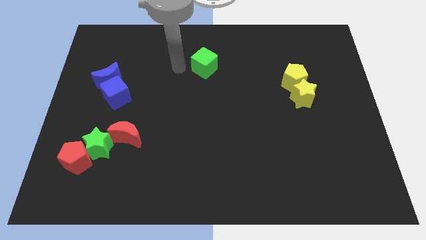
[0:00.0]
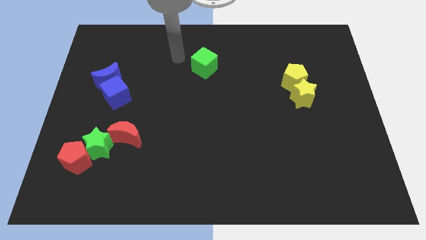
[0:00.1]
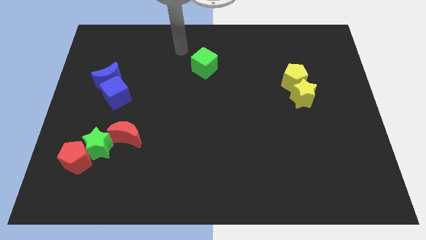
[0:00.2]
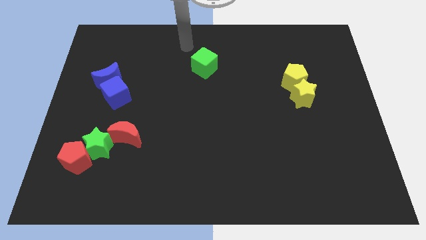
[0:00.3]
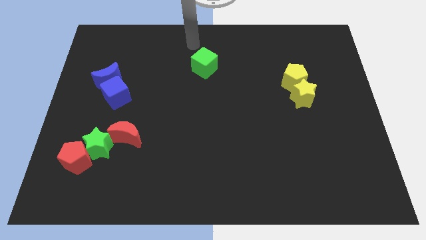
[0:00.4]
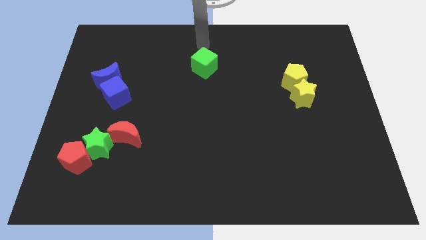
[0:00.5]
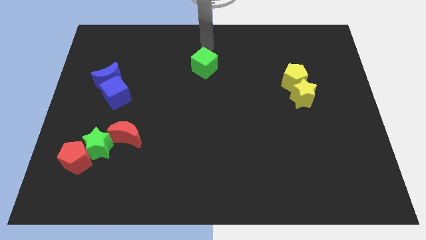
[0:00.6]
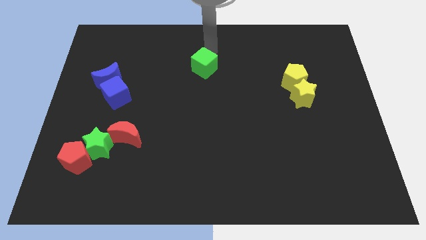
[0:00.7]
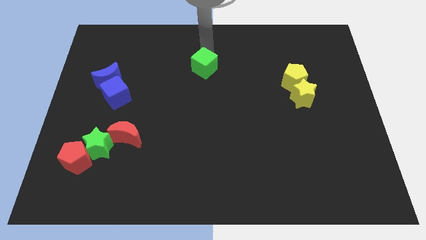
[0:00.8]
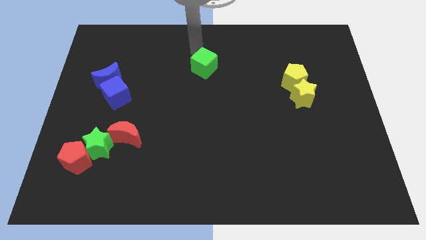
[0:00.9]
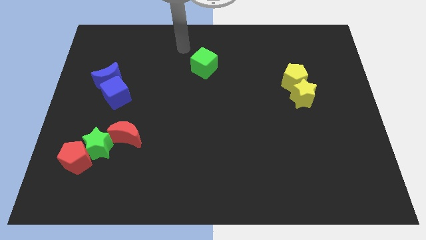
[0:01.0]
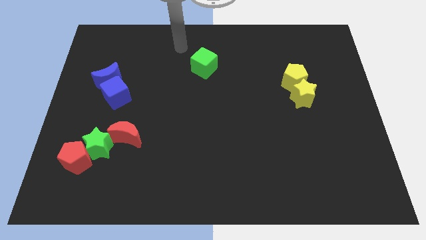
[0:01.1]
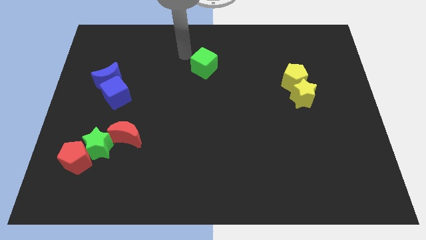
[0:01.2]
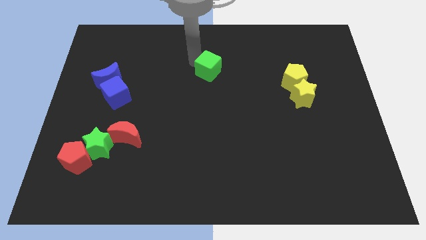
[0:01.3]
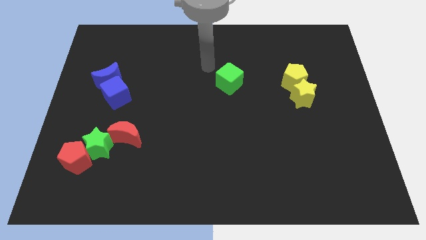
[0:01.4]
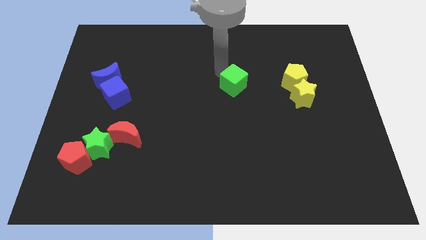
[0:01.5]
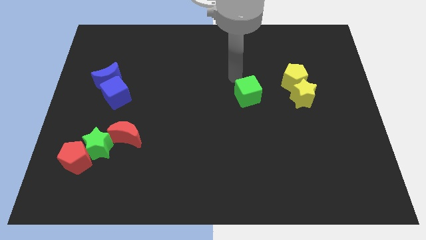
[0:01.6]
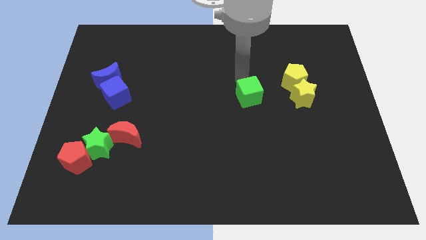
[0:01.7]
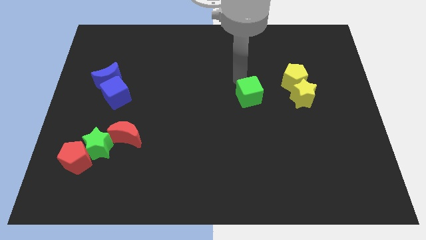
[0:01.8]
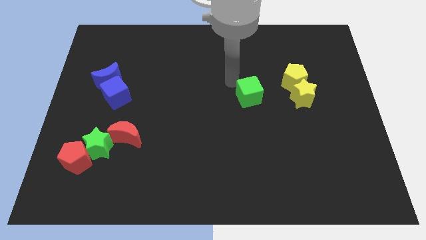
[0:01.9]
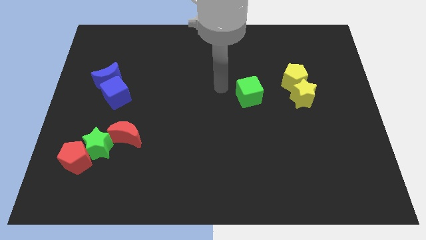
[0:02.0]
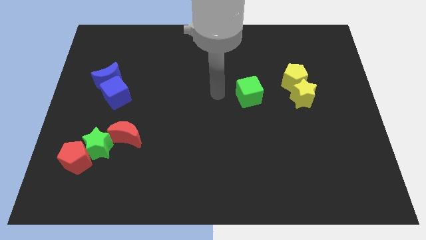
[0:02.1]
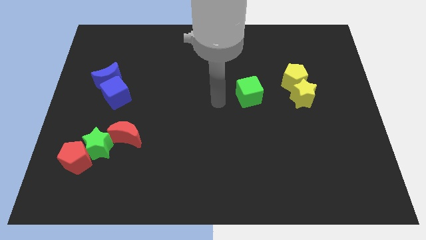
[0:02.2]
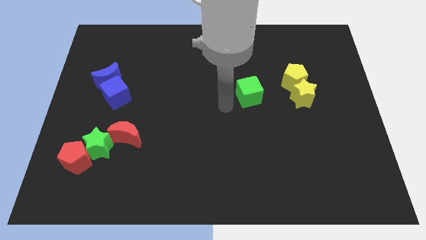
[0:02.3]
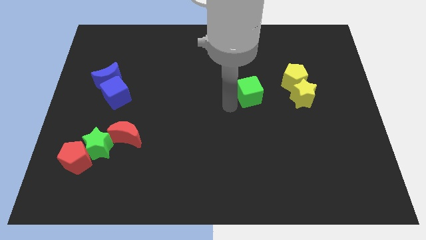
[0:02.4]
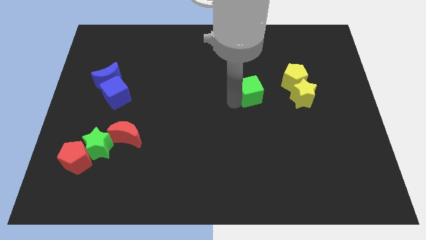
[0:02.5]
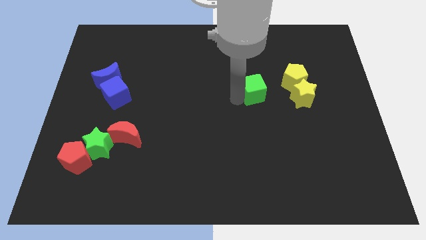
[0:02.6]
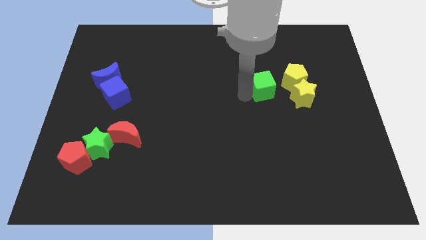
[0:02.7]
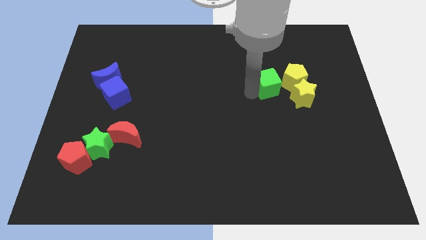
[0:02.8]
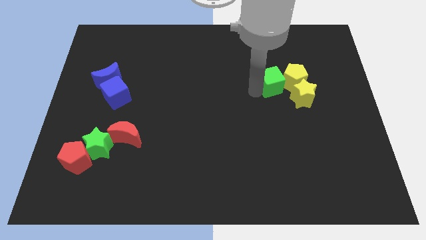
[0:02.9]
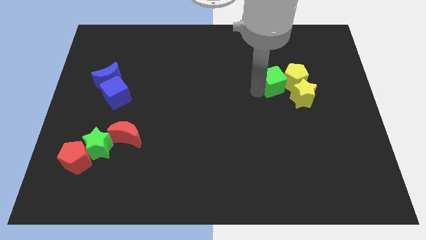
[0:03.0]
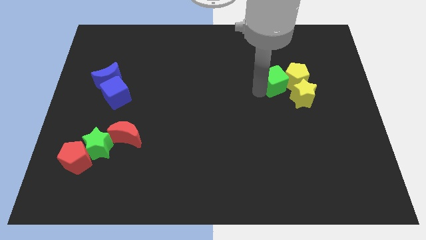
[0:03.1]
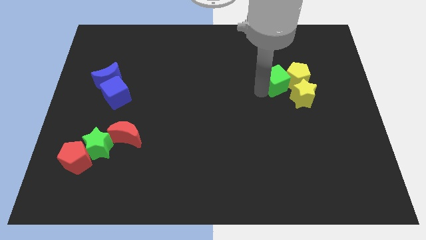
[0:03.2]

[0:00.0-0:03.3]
push the green cube into the yellow pentagon

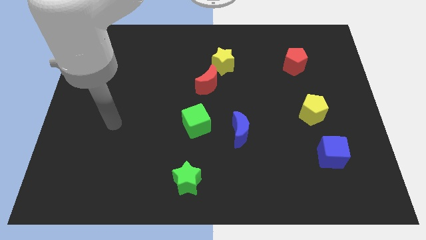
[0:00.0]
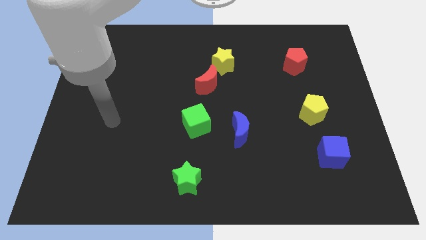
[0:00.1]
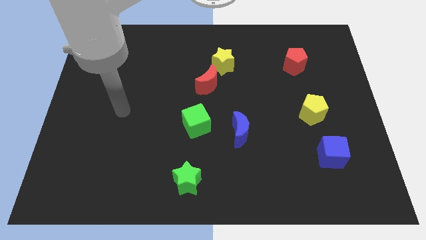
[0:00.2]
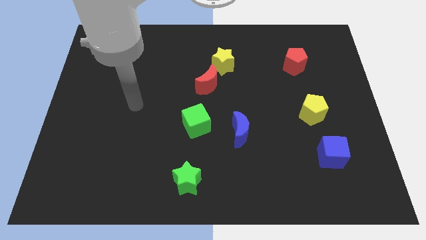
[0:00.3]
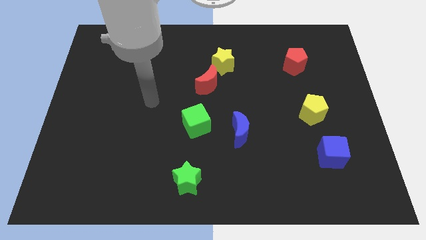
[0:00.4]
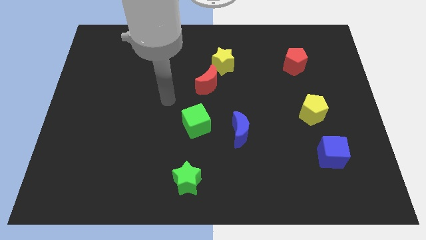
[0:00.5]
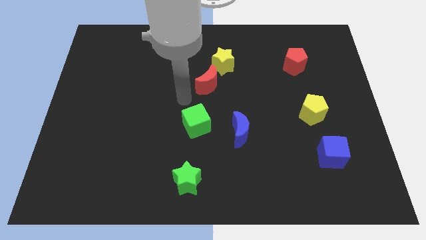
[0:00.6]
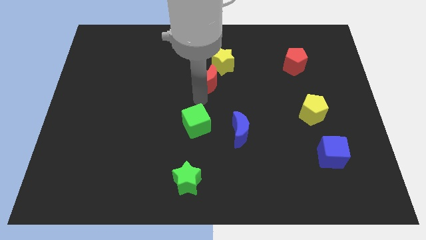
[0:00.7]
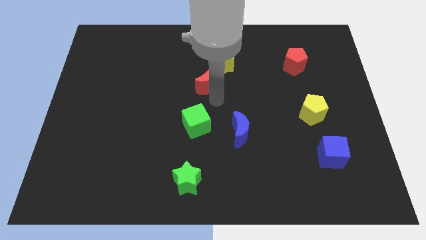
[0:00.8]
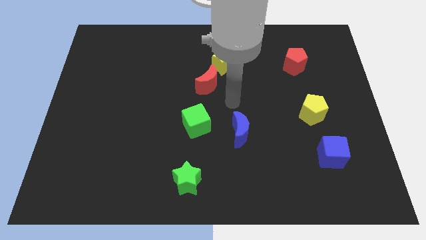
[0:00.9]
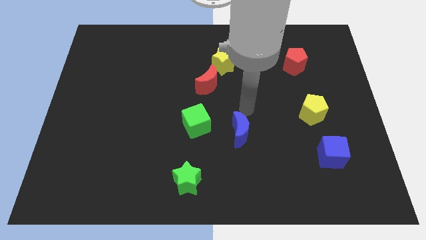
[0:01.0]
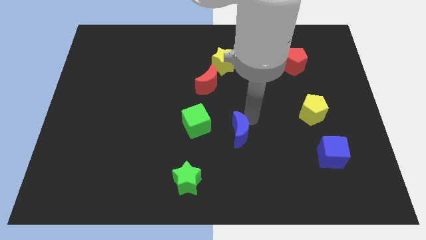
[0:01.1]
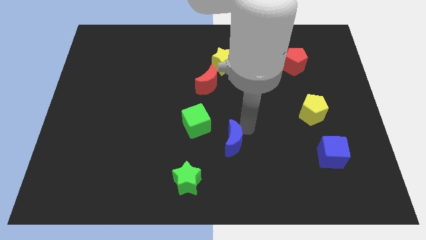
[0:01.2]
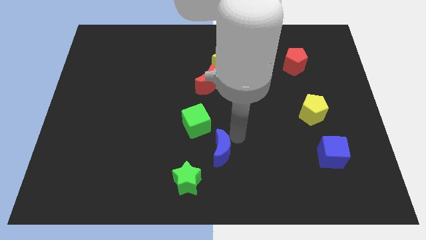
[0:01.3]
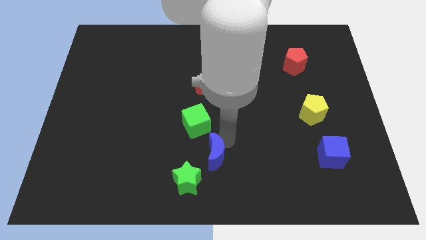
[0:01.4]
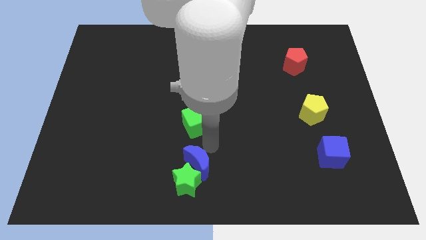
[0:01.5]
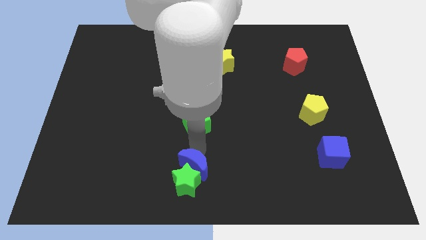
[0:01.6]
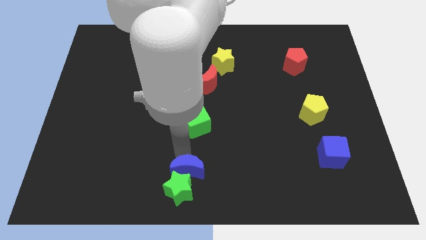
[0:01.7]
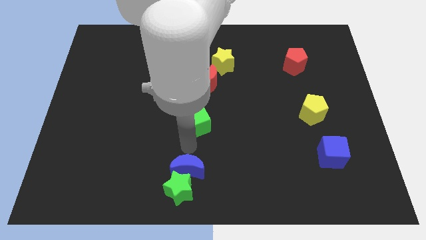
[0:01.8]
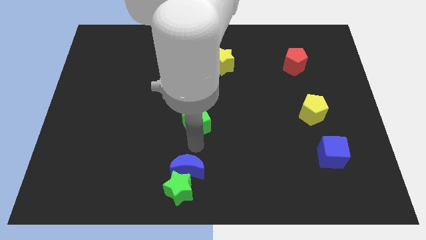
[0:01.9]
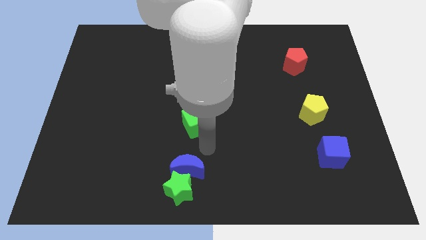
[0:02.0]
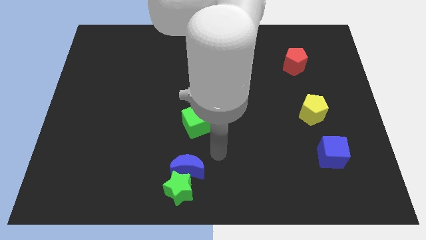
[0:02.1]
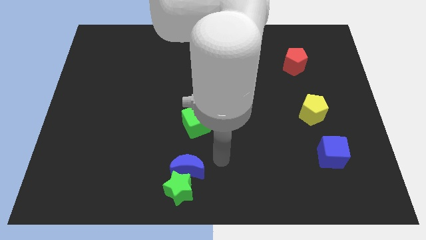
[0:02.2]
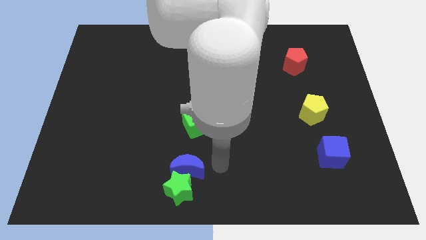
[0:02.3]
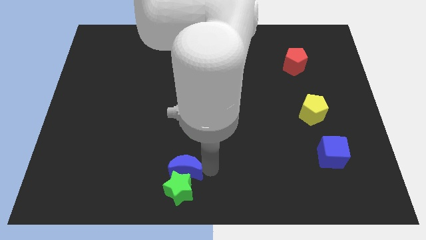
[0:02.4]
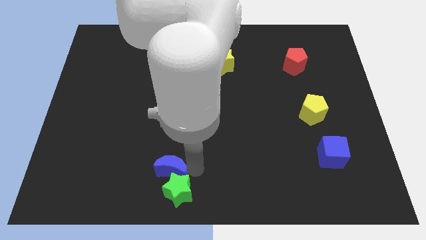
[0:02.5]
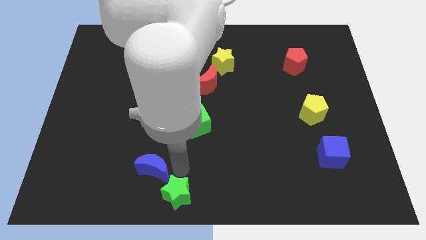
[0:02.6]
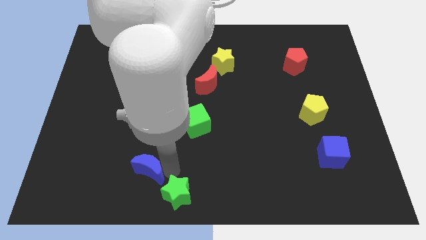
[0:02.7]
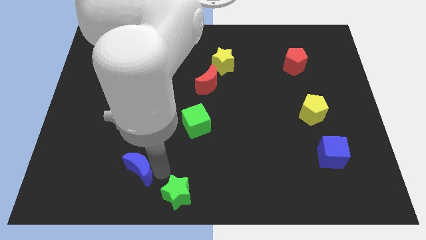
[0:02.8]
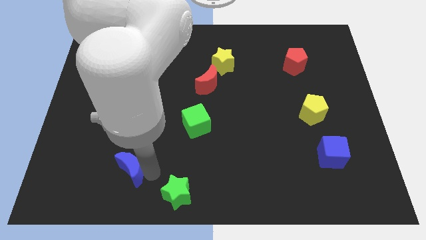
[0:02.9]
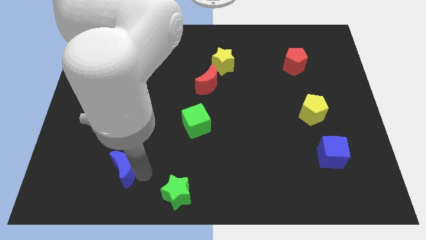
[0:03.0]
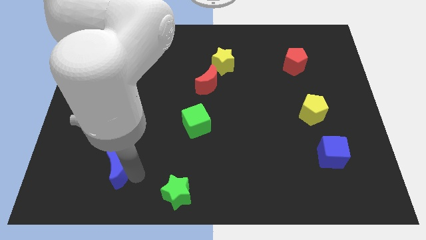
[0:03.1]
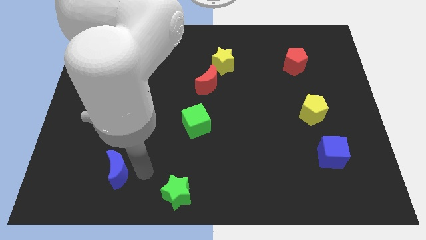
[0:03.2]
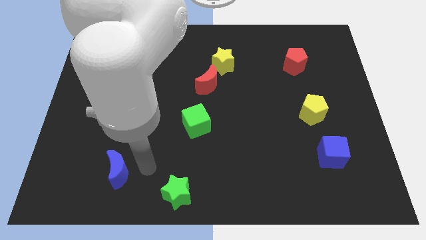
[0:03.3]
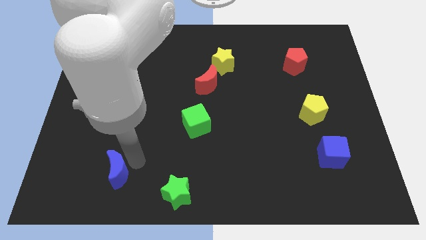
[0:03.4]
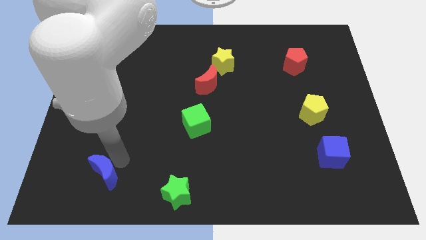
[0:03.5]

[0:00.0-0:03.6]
push the blue moon to the left side of the board by touching the gren star

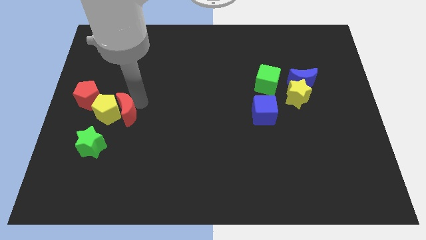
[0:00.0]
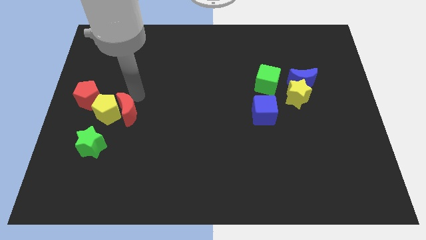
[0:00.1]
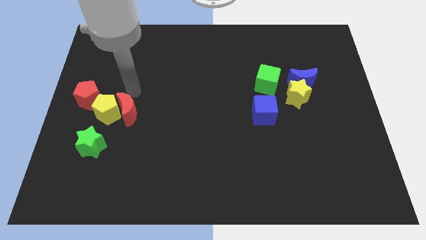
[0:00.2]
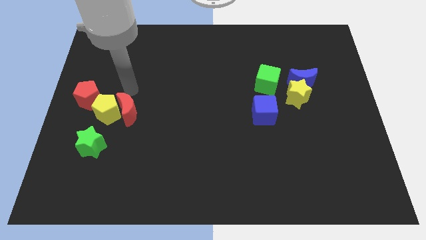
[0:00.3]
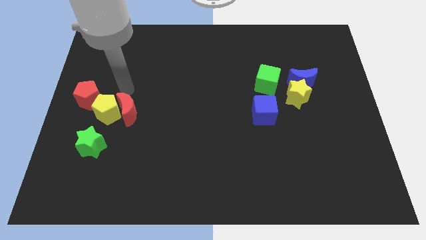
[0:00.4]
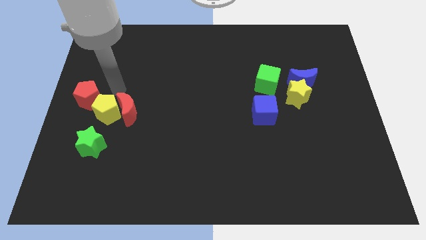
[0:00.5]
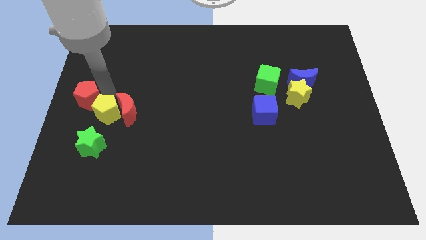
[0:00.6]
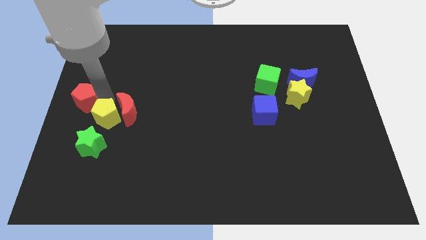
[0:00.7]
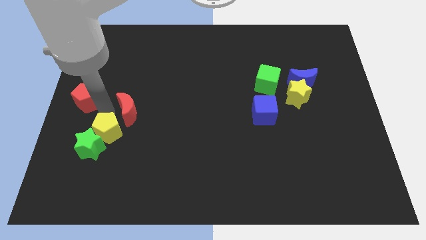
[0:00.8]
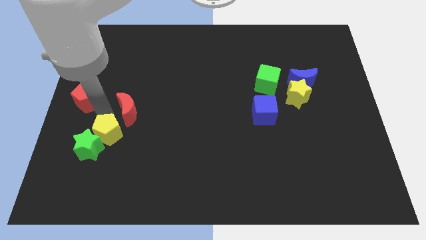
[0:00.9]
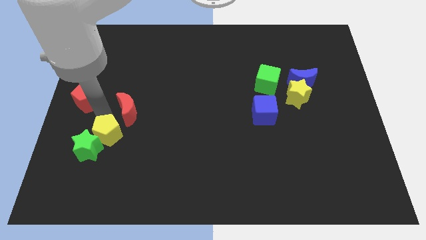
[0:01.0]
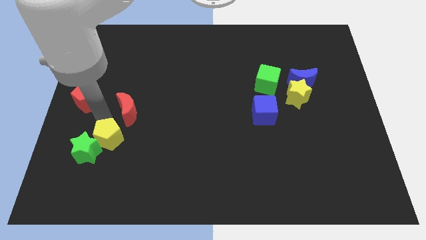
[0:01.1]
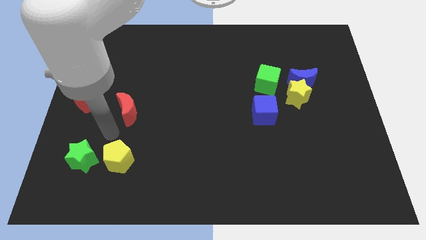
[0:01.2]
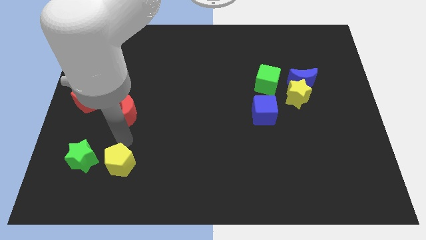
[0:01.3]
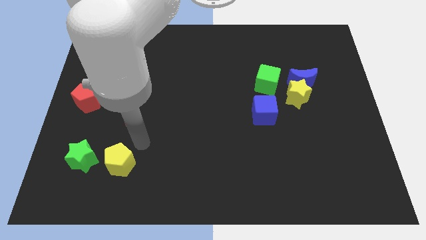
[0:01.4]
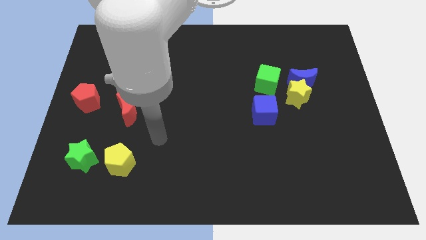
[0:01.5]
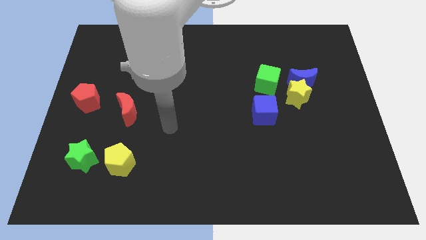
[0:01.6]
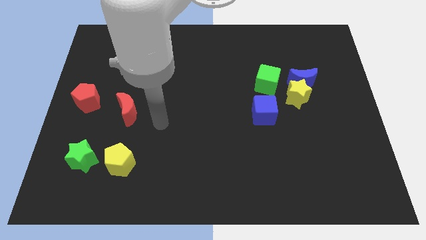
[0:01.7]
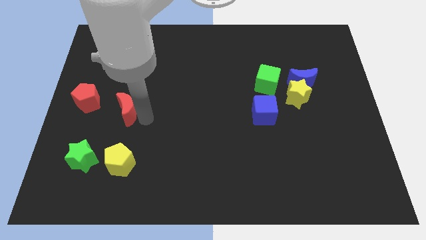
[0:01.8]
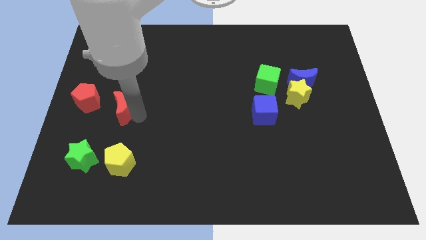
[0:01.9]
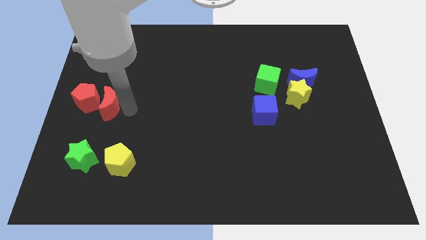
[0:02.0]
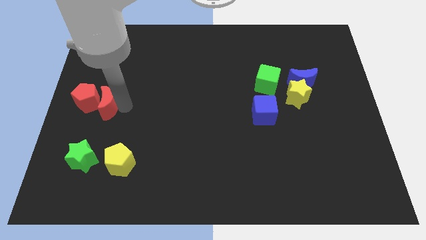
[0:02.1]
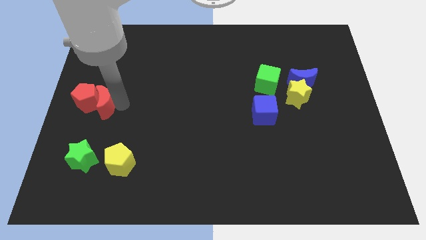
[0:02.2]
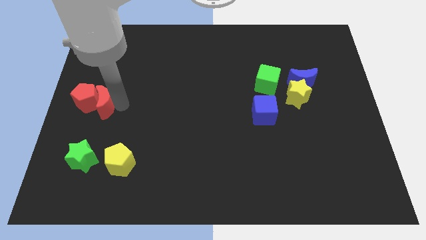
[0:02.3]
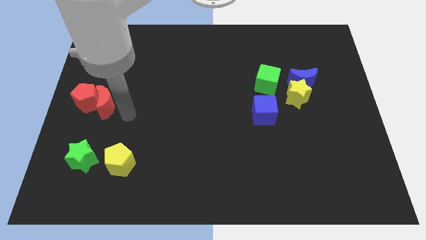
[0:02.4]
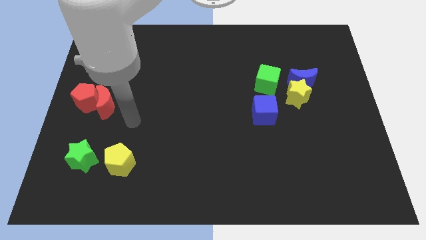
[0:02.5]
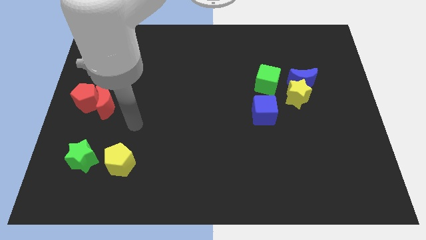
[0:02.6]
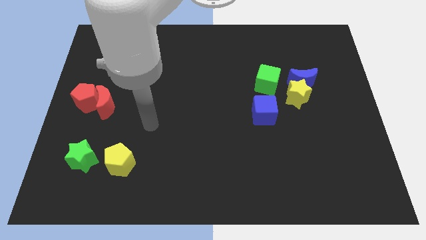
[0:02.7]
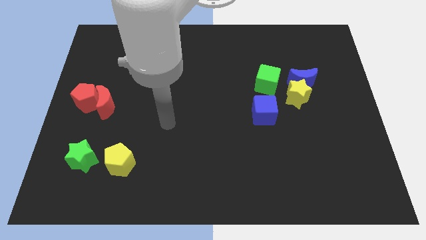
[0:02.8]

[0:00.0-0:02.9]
push yellow pentagon downwards to the bottom side of the board
